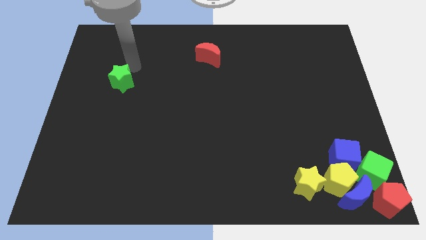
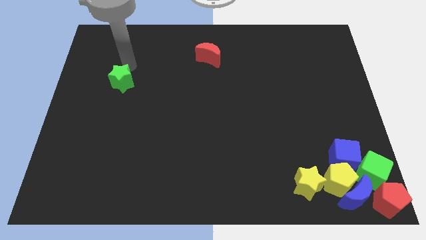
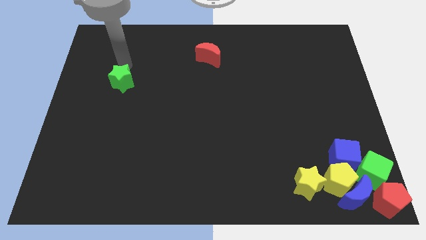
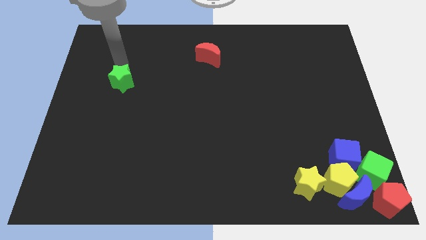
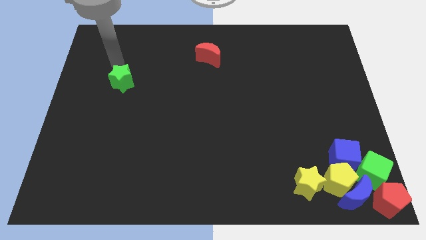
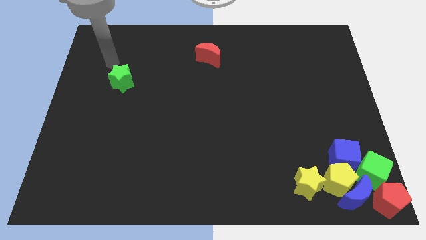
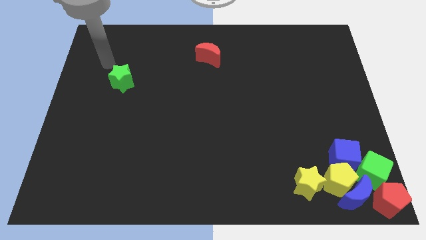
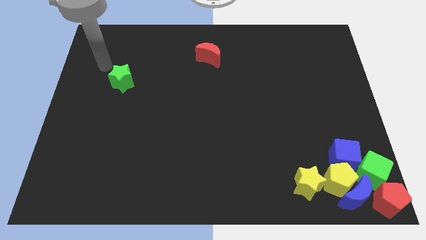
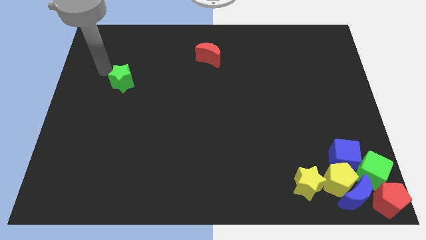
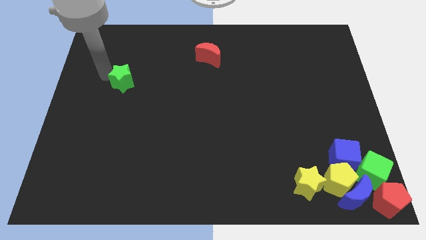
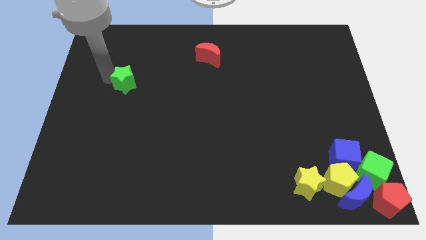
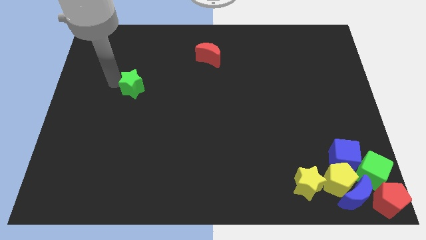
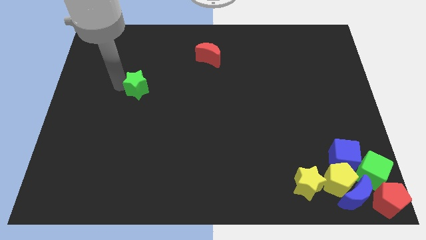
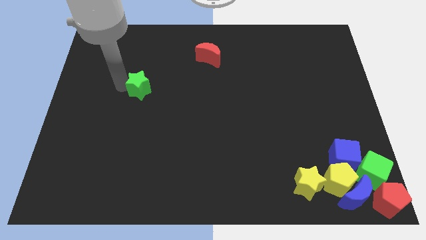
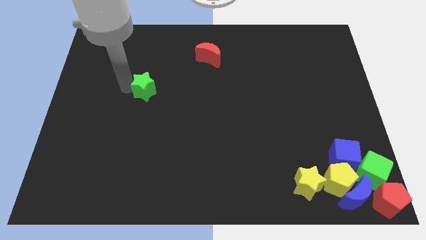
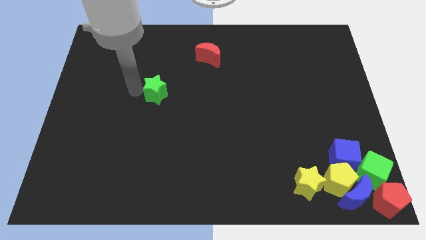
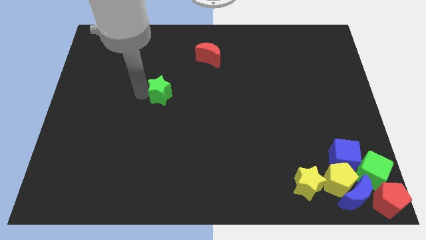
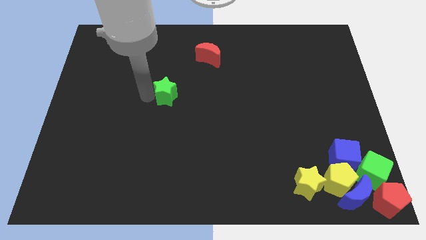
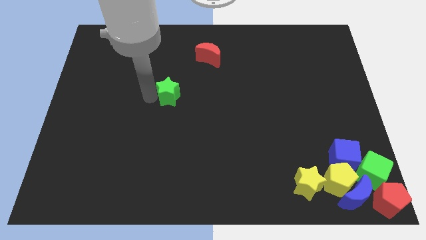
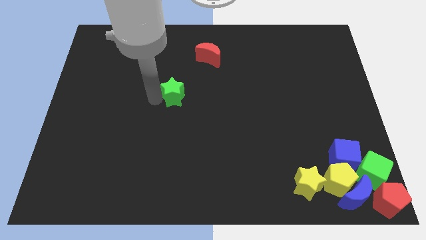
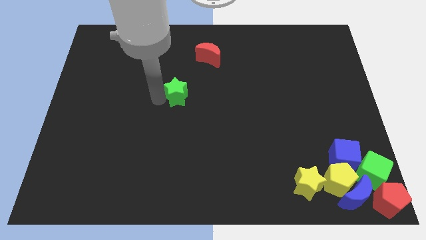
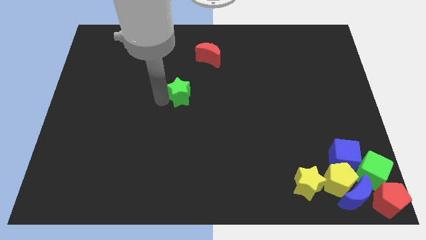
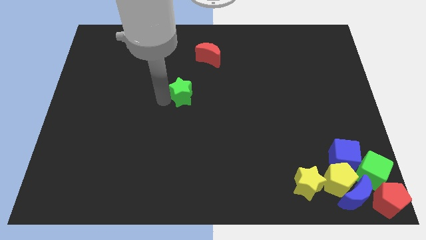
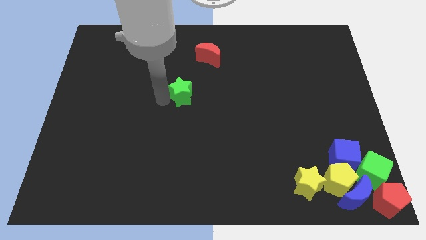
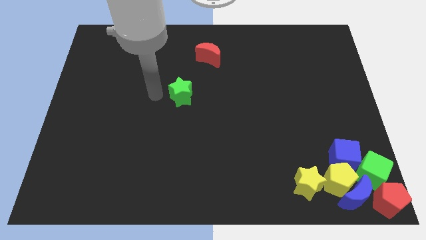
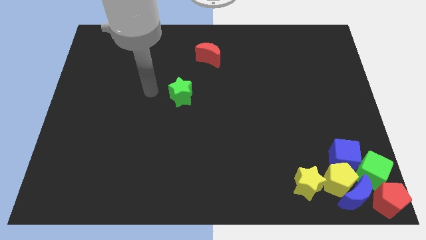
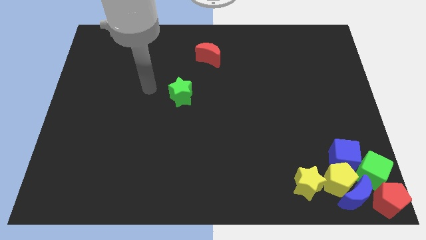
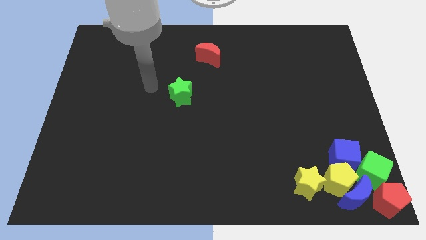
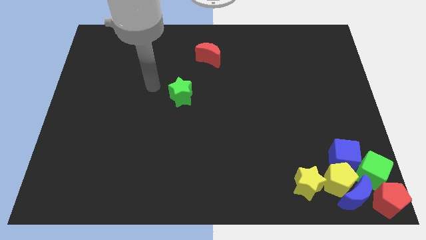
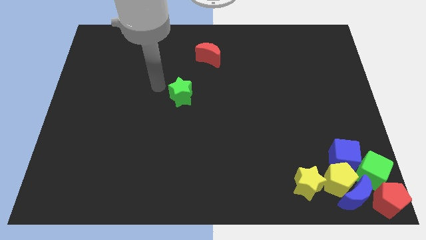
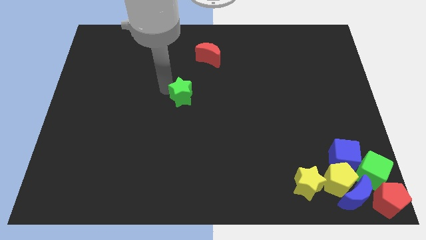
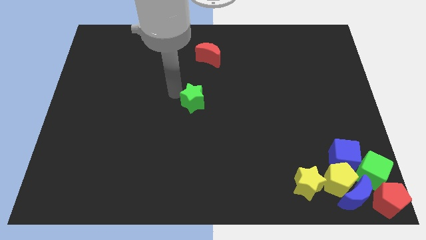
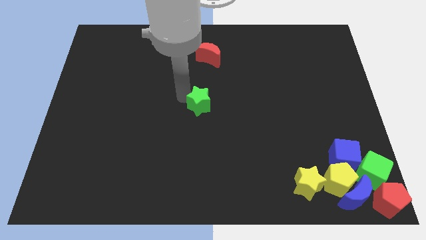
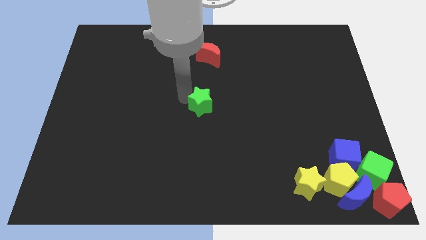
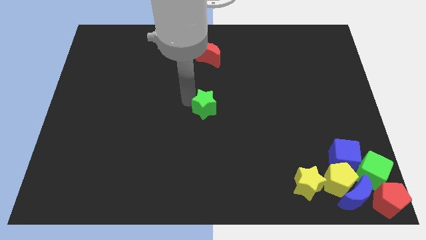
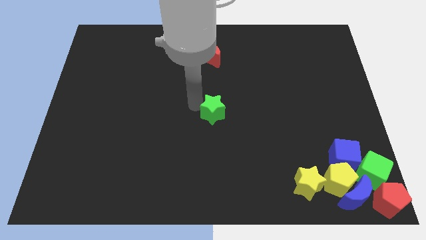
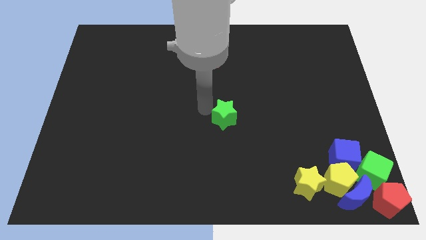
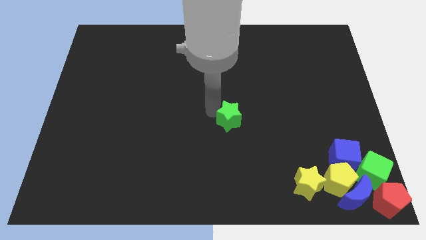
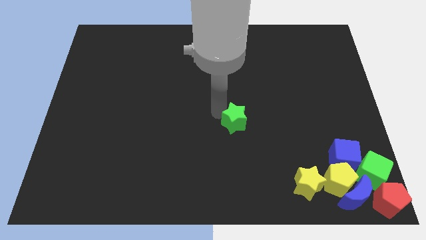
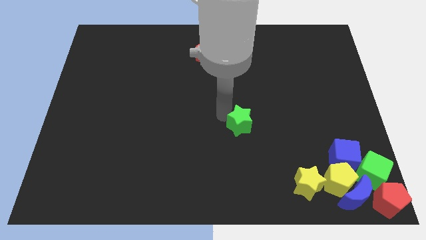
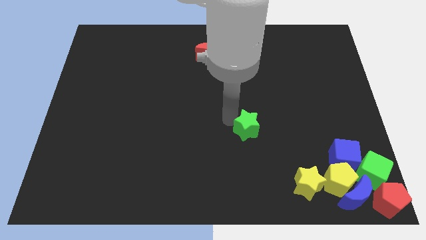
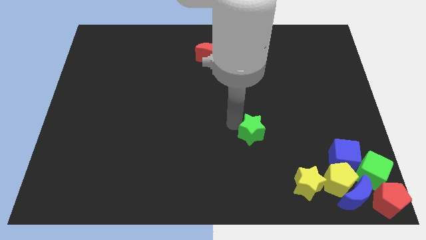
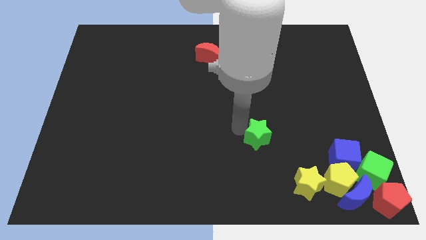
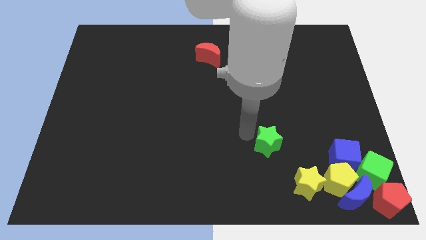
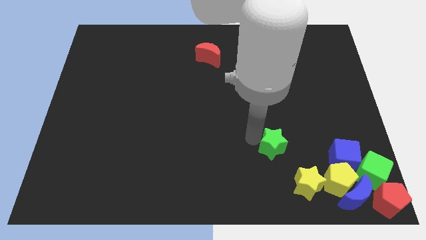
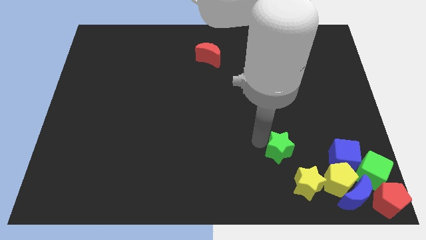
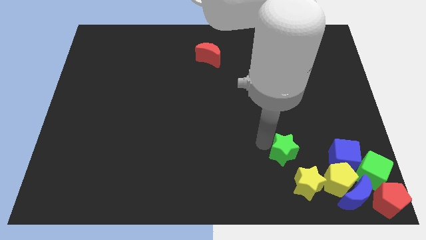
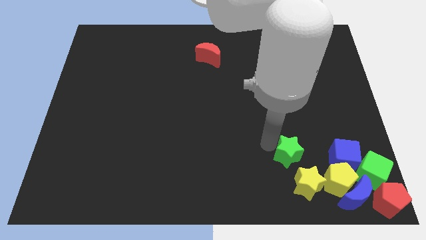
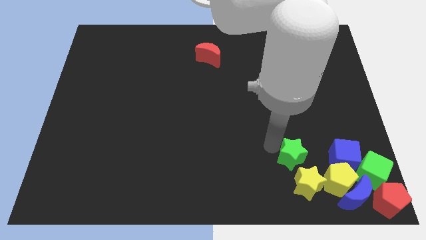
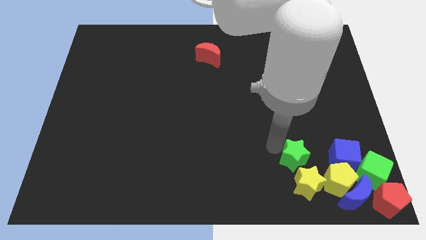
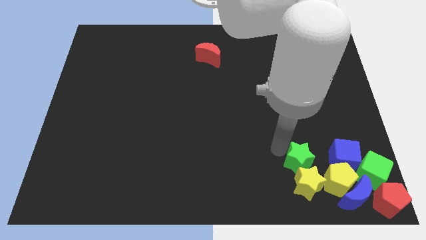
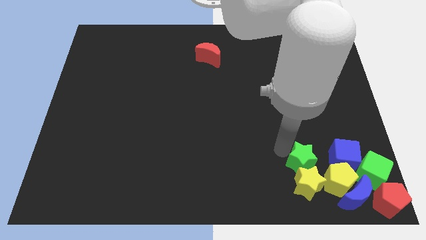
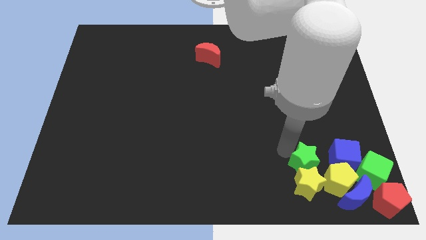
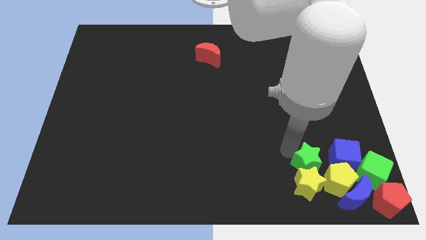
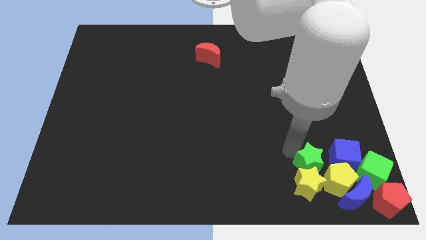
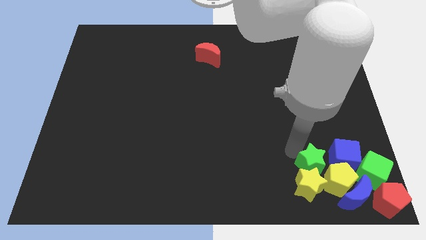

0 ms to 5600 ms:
move the green star towards the top of the yellow star

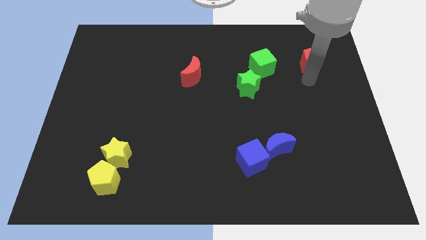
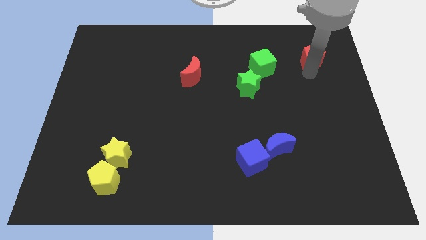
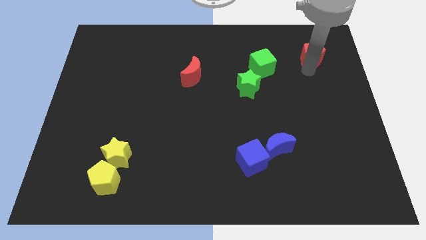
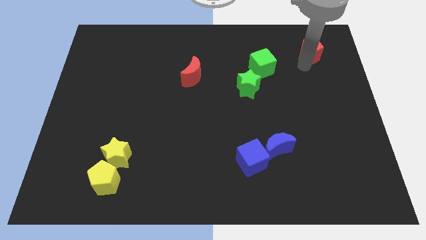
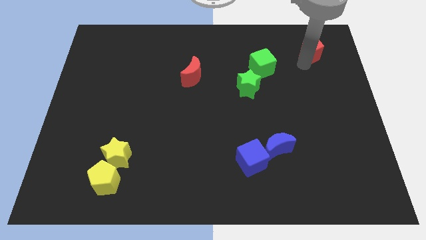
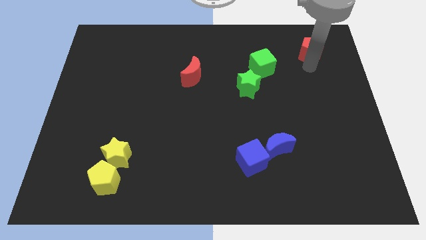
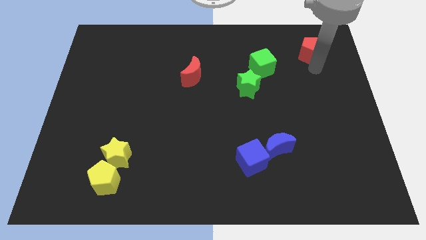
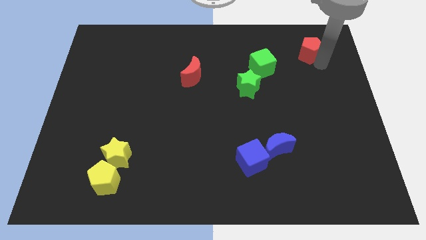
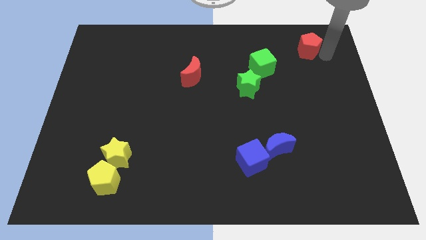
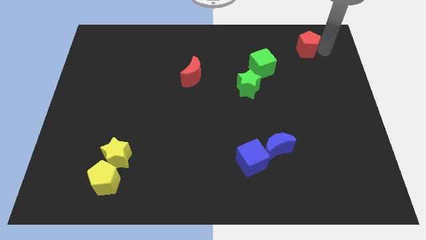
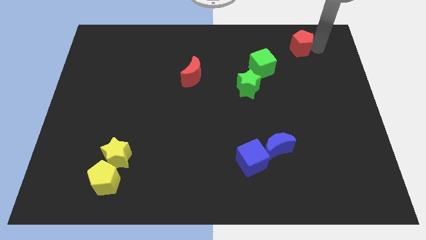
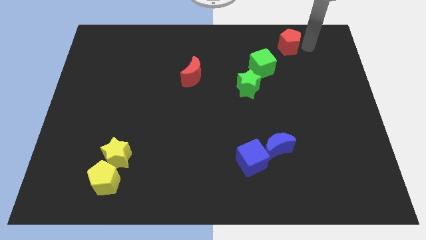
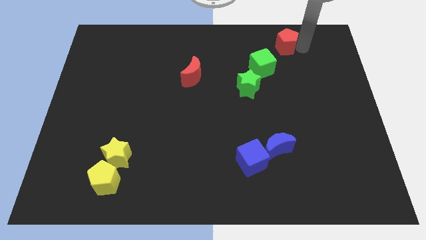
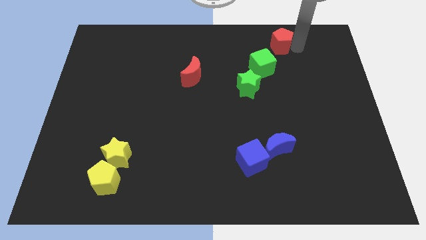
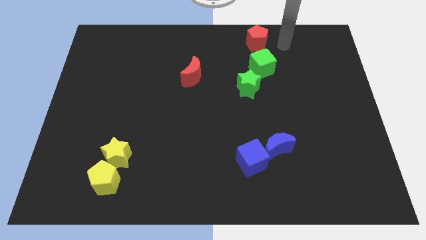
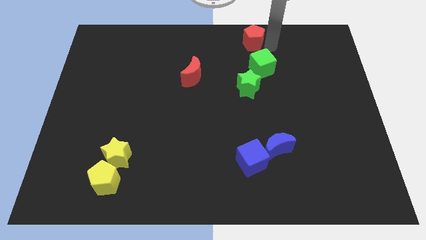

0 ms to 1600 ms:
push the red pentagon above the green cube

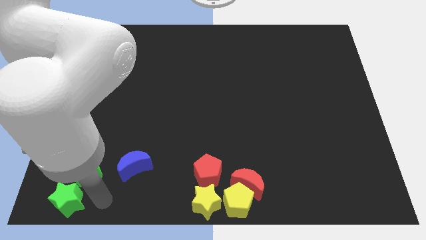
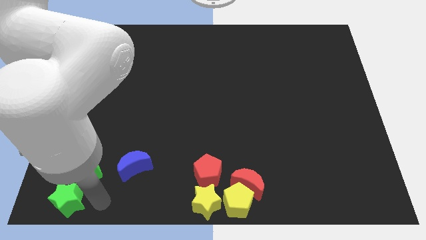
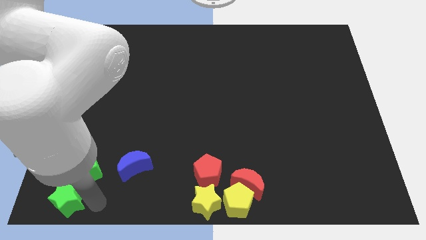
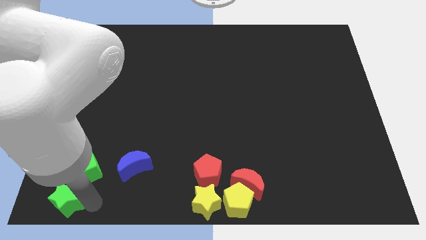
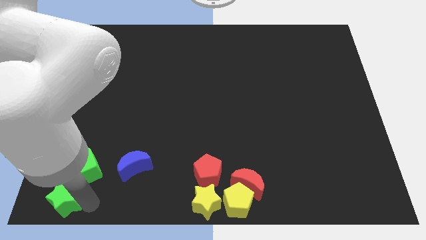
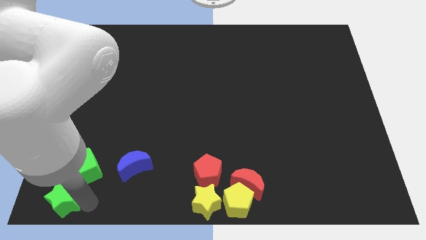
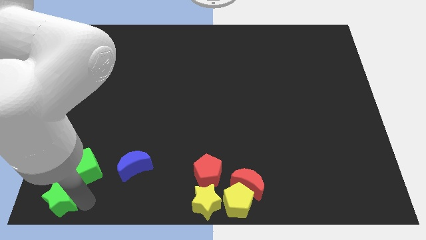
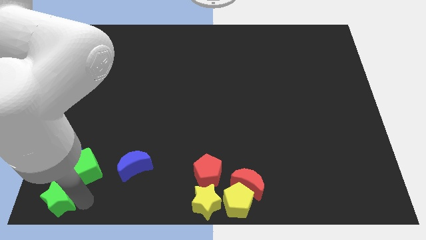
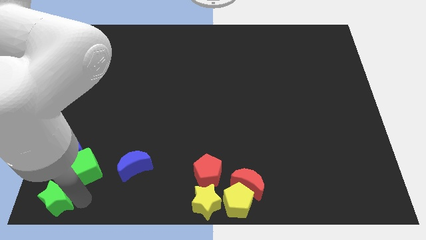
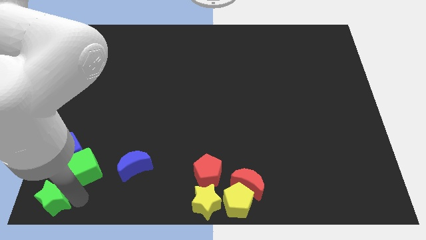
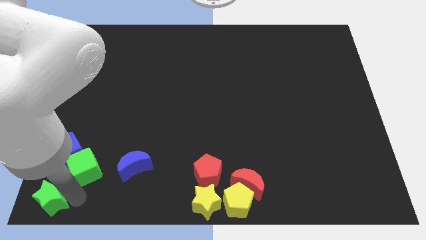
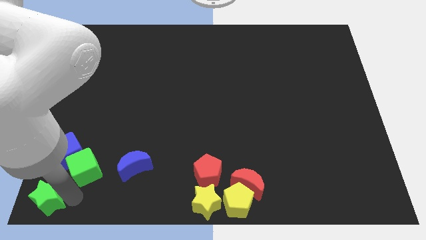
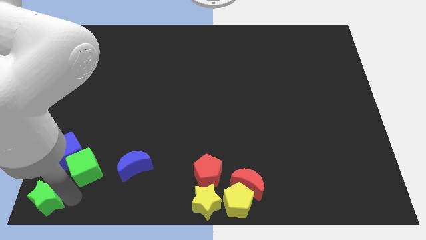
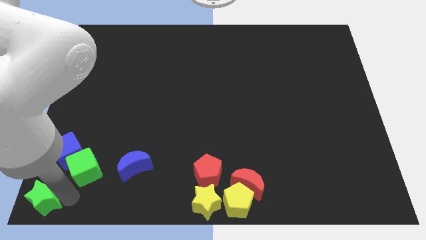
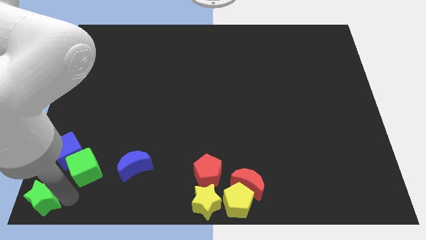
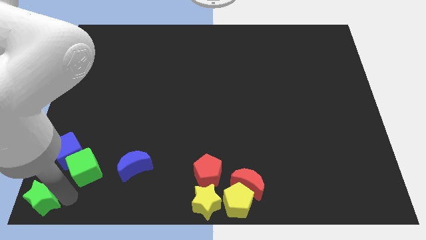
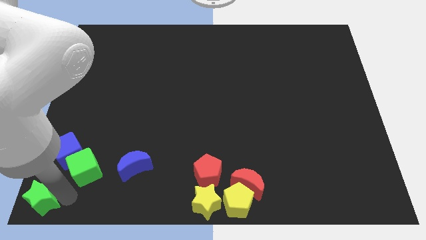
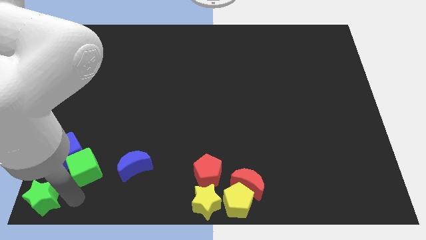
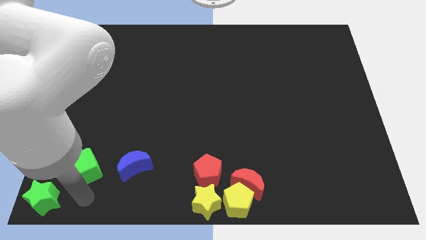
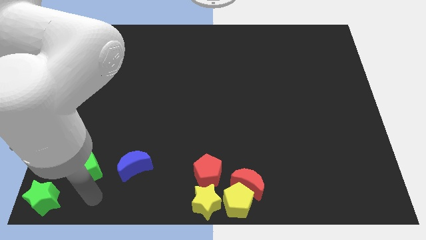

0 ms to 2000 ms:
slide the green star to the bottom left corner of the board
